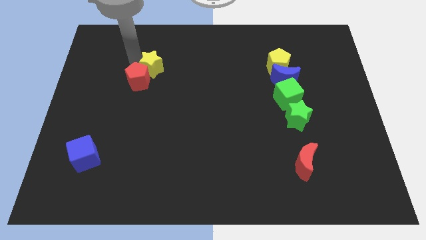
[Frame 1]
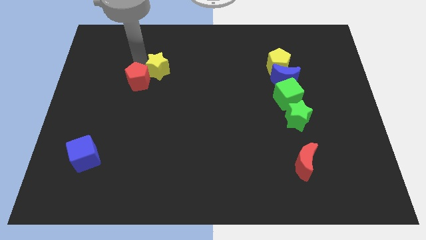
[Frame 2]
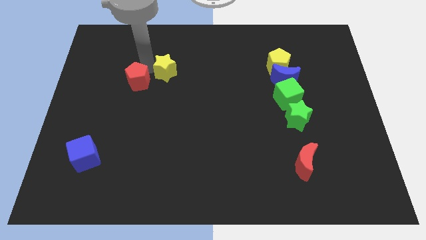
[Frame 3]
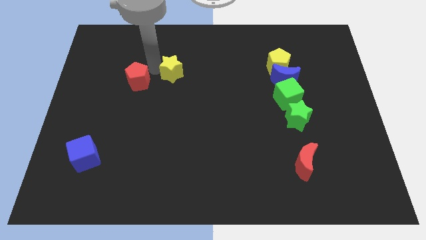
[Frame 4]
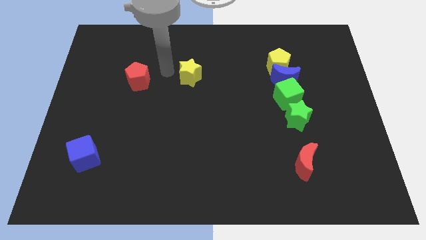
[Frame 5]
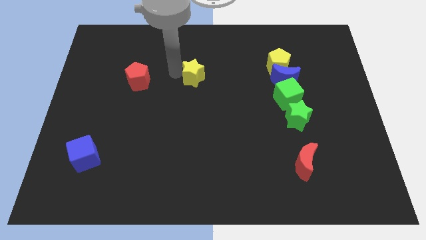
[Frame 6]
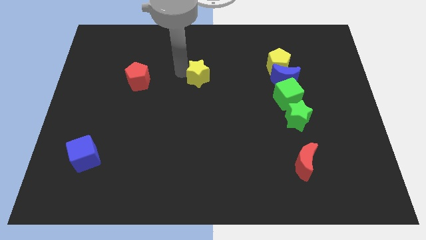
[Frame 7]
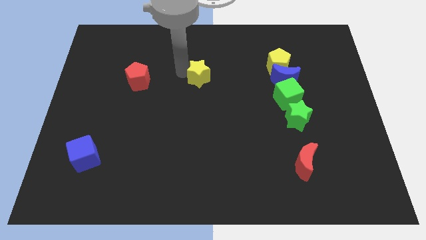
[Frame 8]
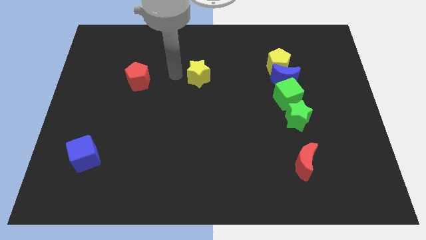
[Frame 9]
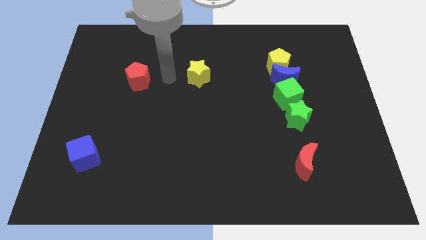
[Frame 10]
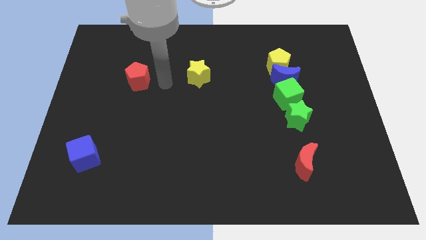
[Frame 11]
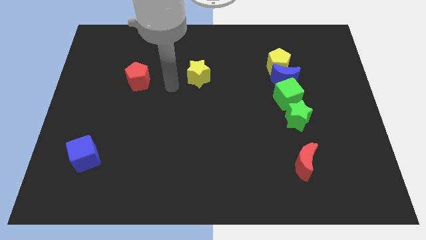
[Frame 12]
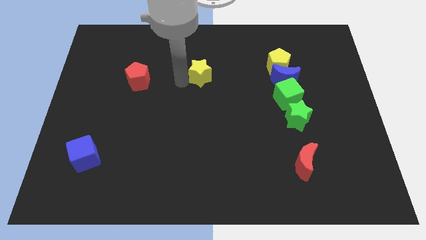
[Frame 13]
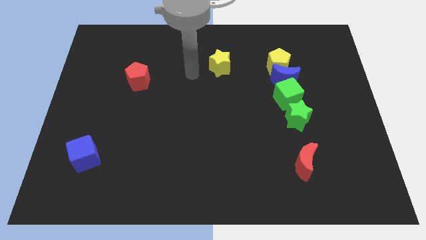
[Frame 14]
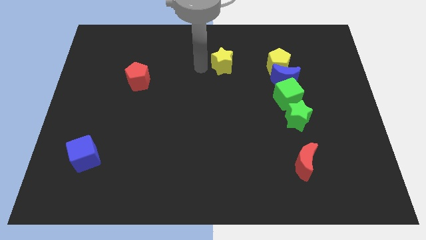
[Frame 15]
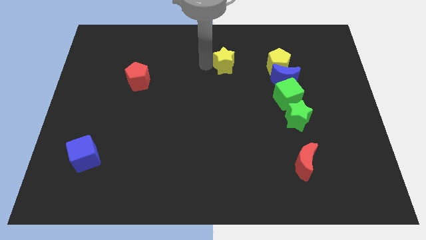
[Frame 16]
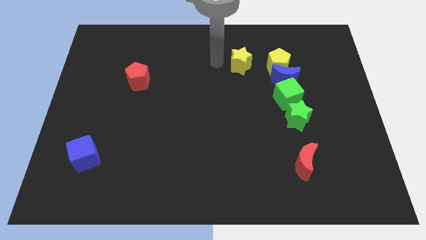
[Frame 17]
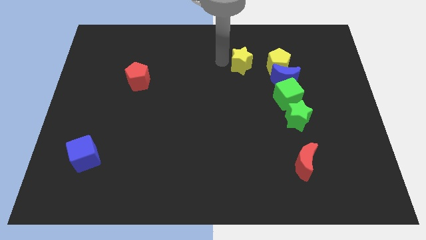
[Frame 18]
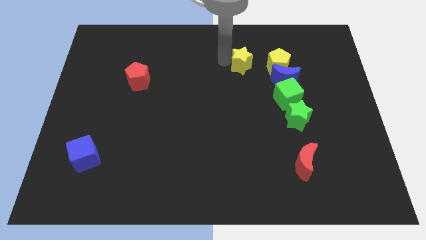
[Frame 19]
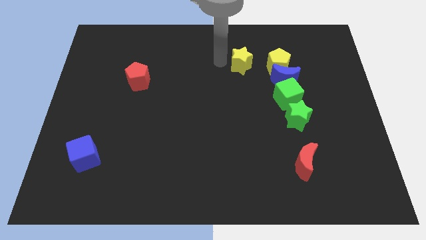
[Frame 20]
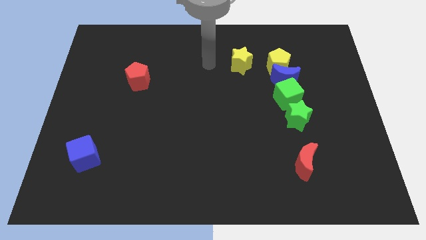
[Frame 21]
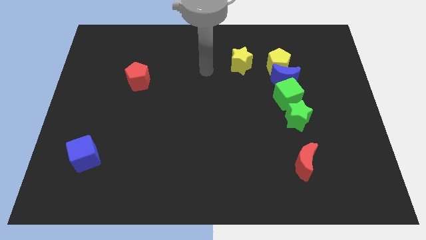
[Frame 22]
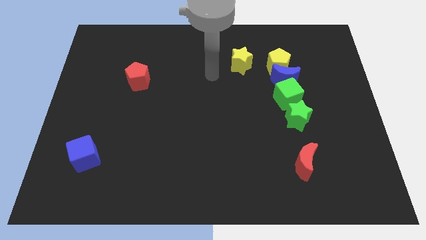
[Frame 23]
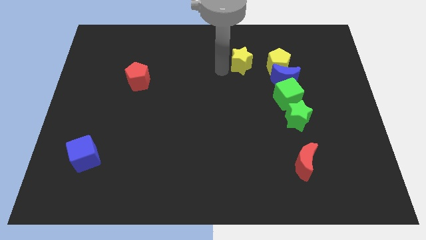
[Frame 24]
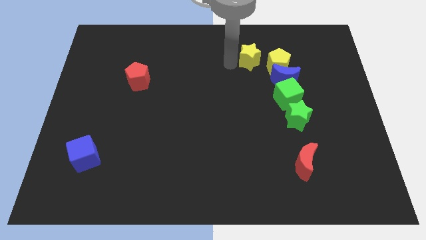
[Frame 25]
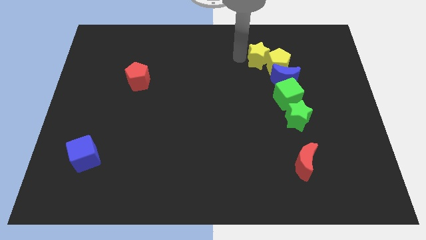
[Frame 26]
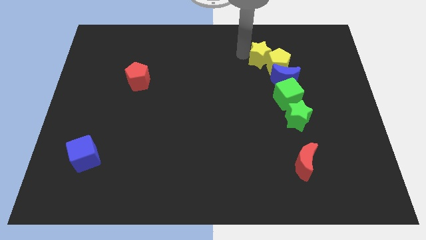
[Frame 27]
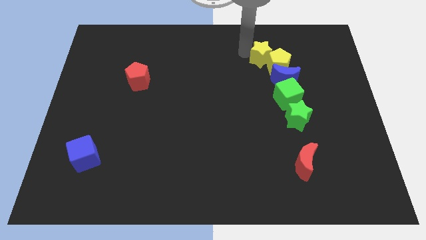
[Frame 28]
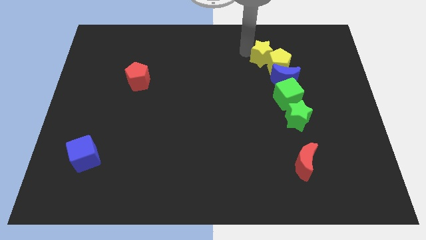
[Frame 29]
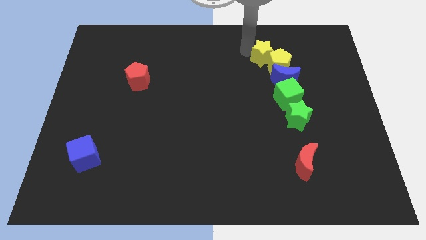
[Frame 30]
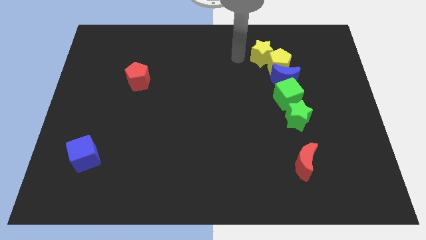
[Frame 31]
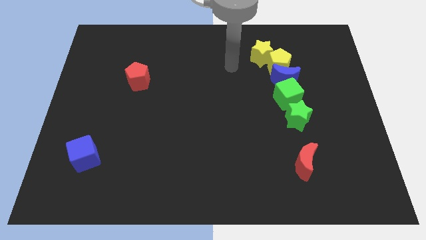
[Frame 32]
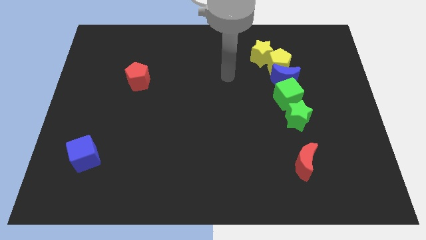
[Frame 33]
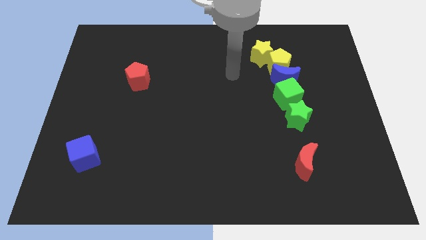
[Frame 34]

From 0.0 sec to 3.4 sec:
push the yellow star into the yellow pentagon

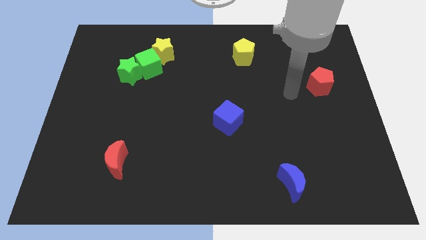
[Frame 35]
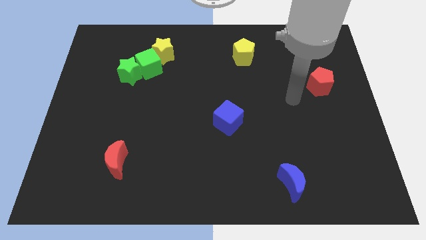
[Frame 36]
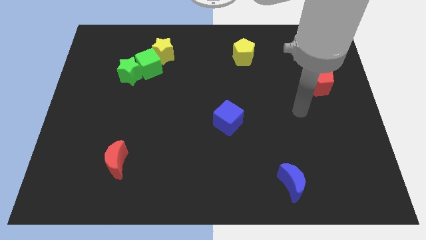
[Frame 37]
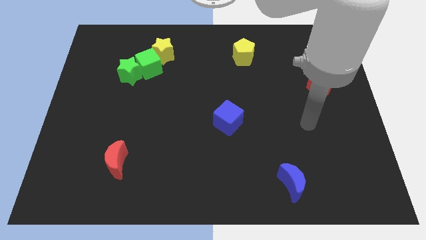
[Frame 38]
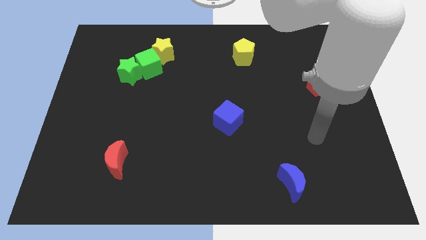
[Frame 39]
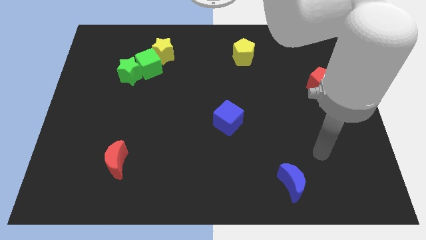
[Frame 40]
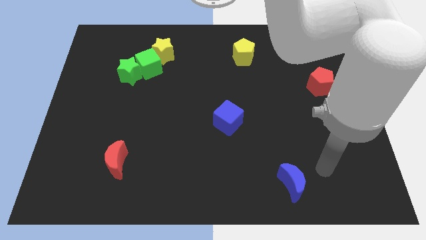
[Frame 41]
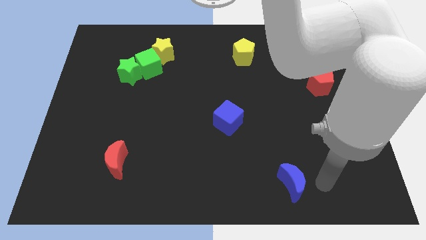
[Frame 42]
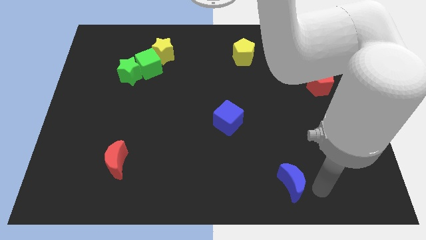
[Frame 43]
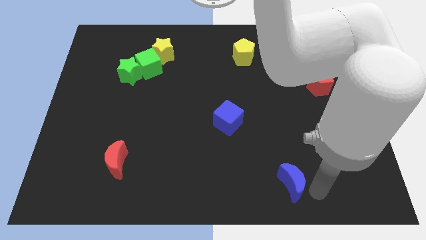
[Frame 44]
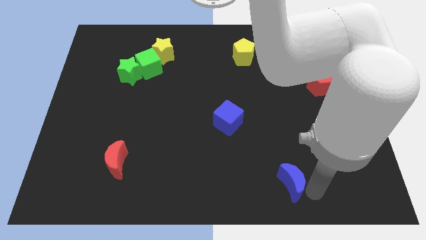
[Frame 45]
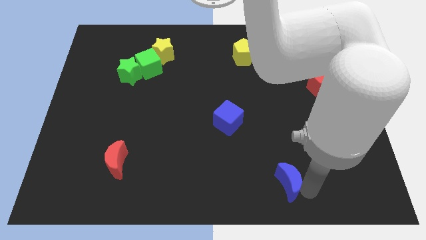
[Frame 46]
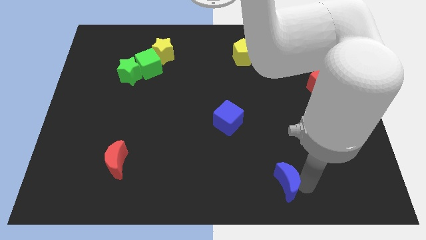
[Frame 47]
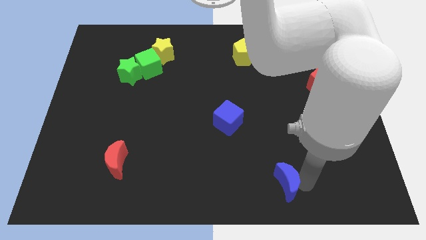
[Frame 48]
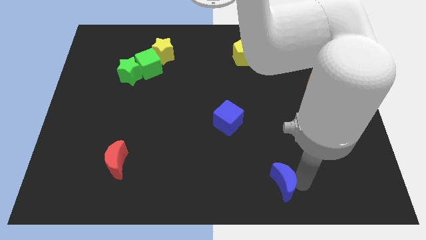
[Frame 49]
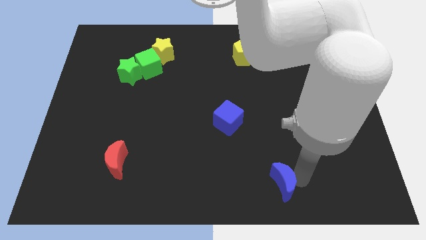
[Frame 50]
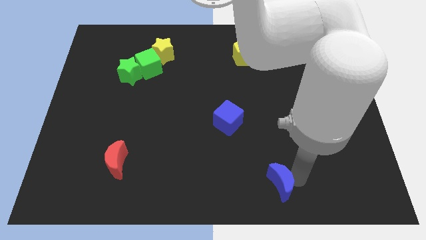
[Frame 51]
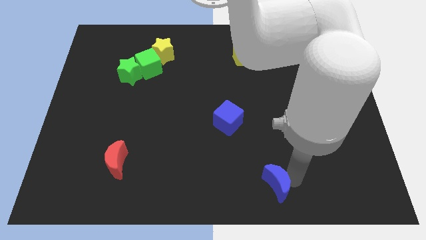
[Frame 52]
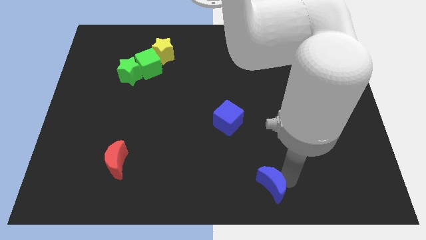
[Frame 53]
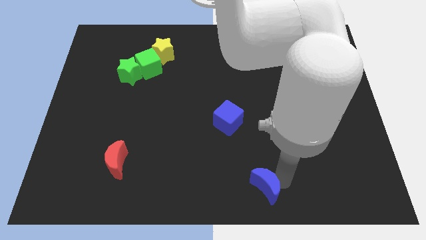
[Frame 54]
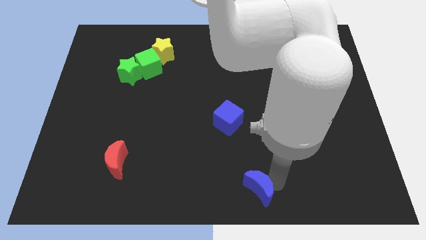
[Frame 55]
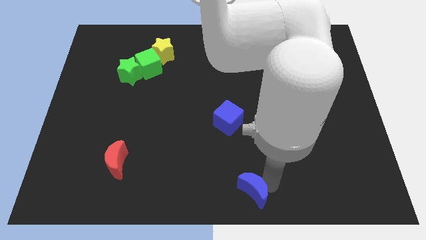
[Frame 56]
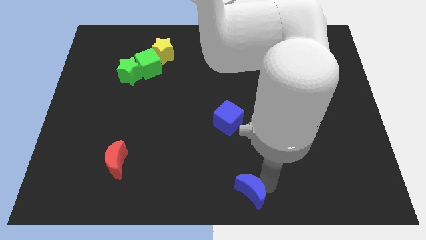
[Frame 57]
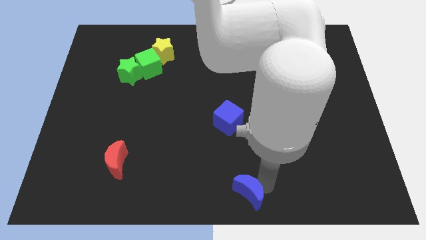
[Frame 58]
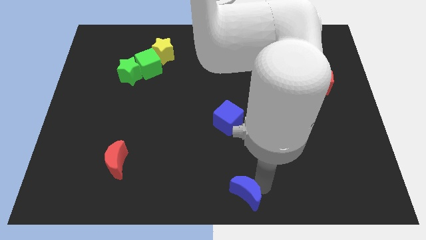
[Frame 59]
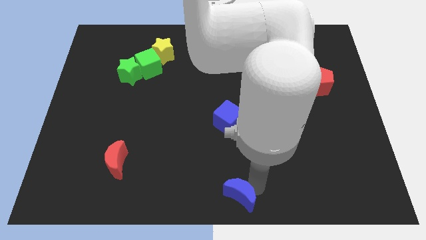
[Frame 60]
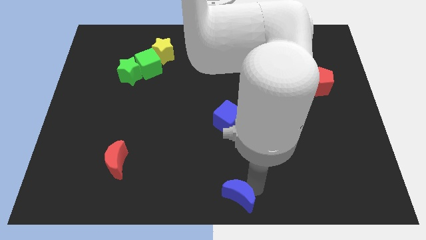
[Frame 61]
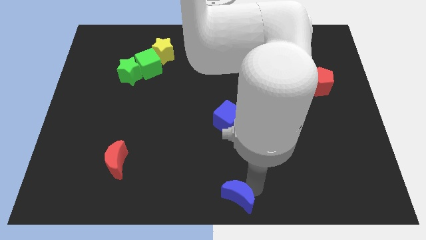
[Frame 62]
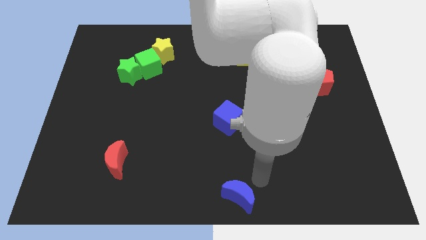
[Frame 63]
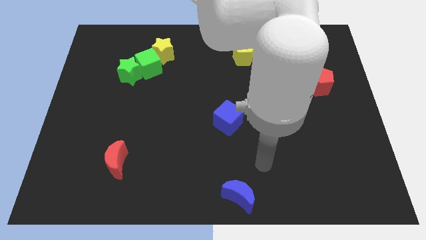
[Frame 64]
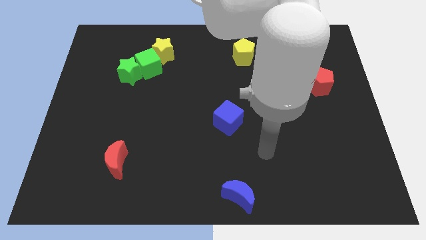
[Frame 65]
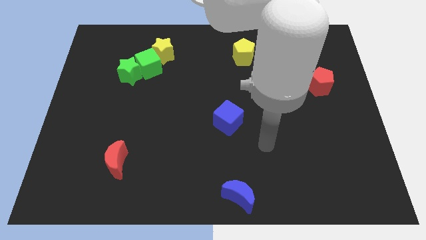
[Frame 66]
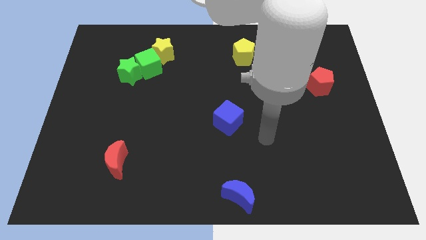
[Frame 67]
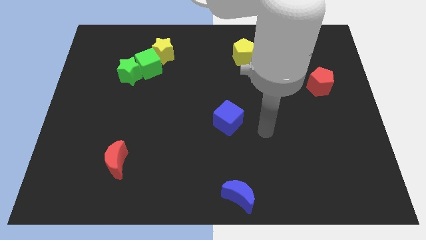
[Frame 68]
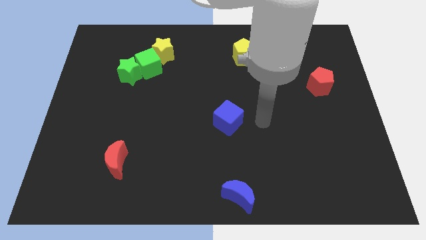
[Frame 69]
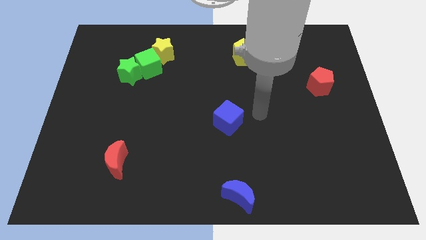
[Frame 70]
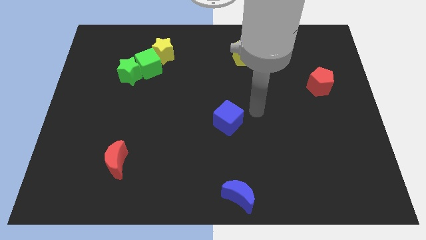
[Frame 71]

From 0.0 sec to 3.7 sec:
push the blue crescent to the bottom center of the board

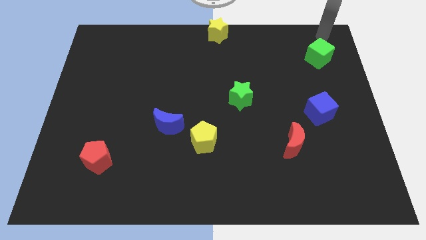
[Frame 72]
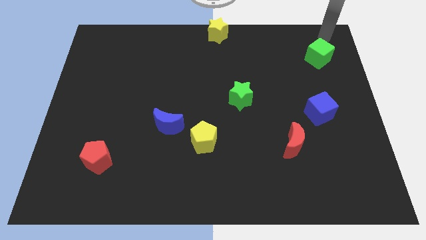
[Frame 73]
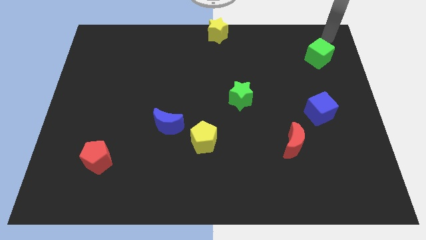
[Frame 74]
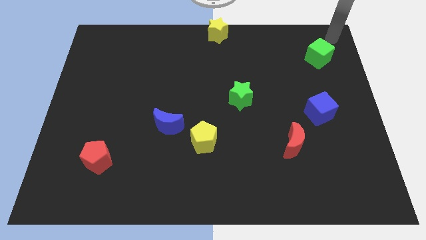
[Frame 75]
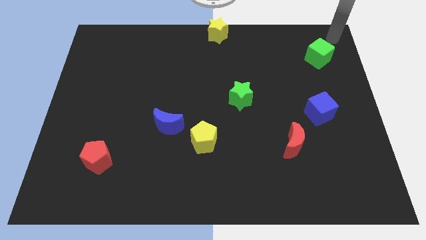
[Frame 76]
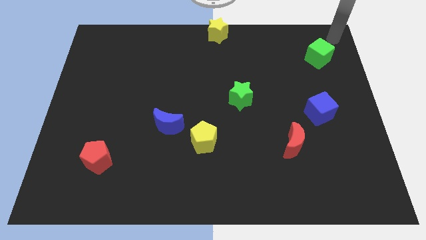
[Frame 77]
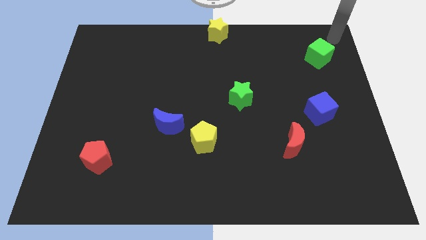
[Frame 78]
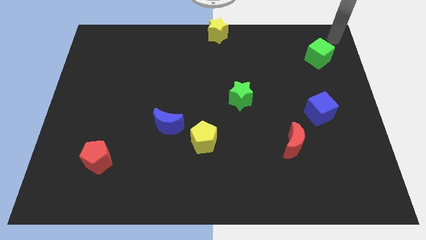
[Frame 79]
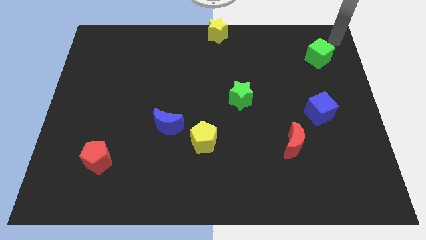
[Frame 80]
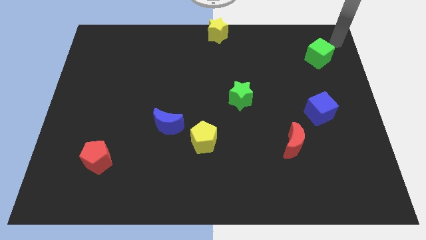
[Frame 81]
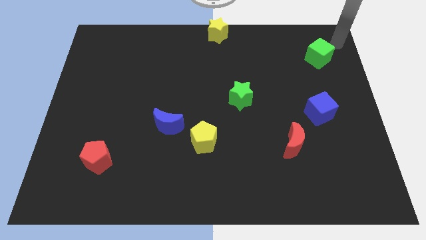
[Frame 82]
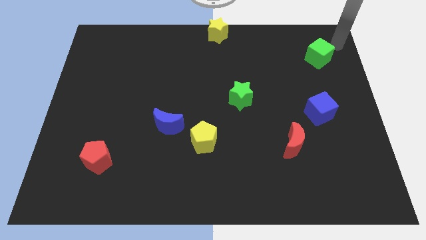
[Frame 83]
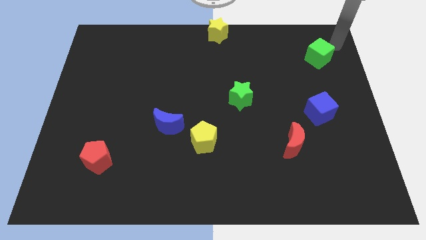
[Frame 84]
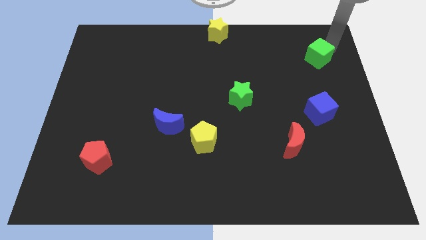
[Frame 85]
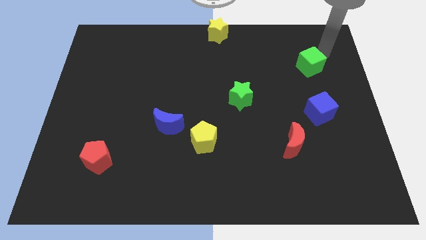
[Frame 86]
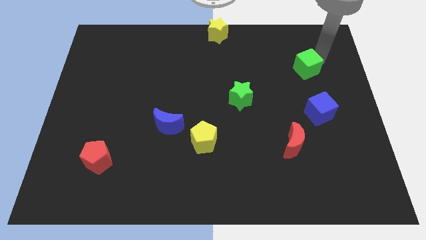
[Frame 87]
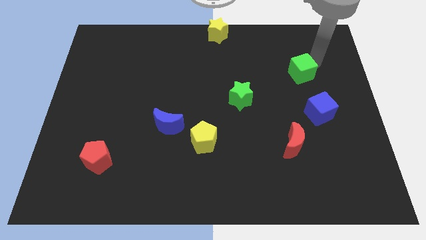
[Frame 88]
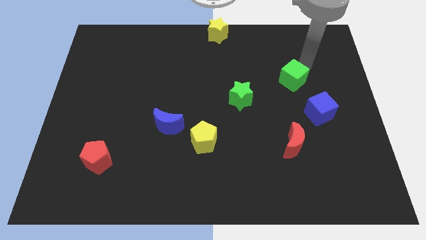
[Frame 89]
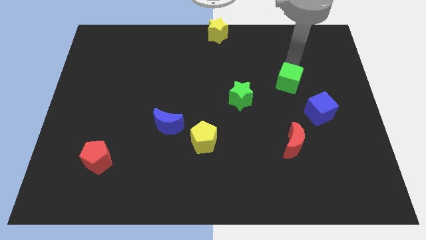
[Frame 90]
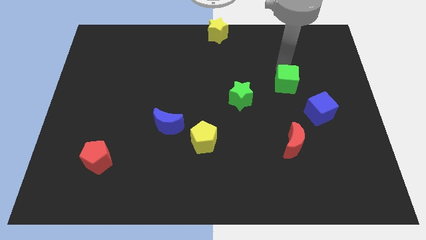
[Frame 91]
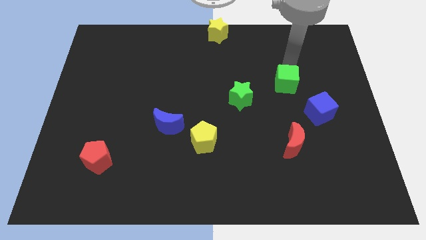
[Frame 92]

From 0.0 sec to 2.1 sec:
drag the green cube slightly down side
